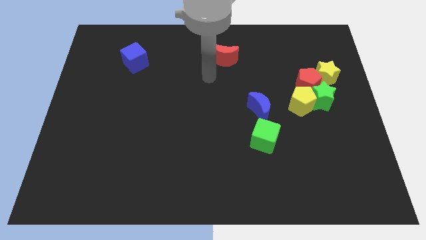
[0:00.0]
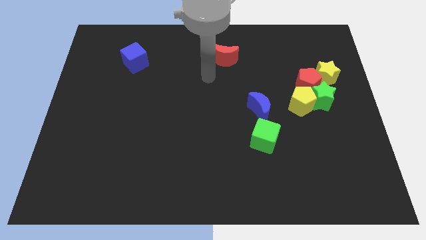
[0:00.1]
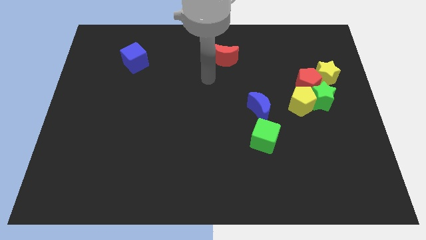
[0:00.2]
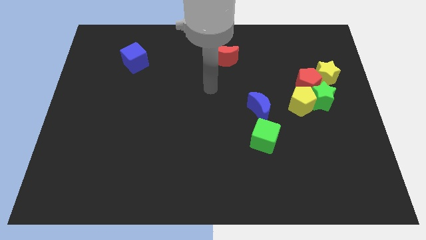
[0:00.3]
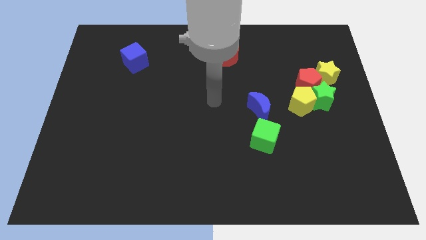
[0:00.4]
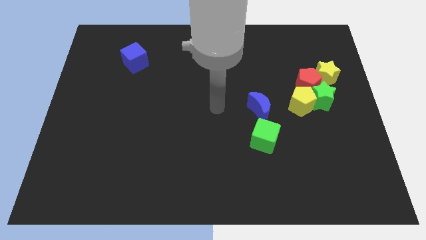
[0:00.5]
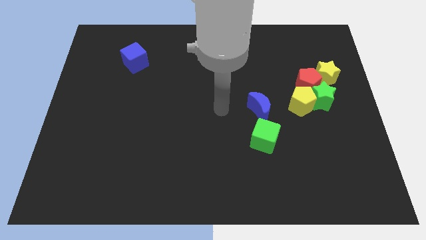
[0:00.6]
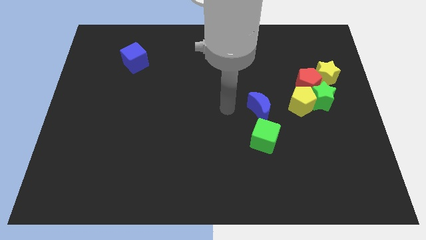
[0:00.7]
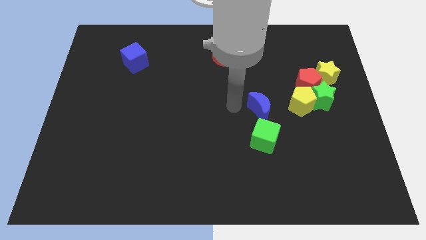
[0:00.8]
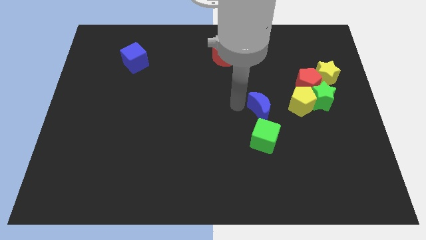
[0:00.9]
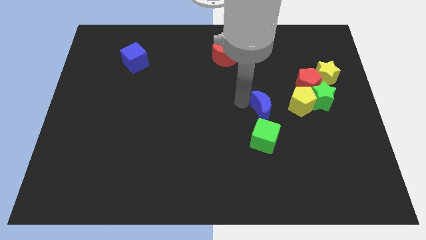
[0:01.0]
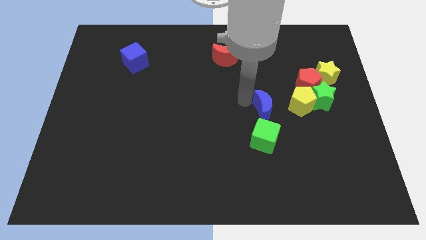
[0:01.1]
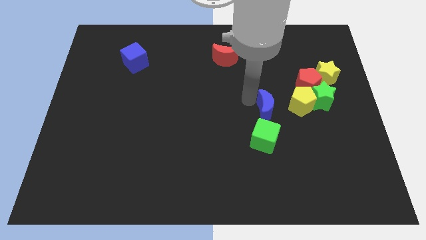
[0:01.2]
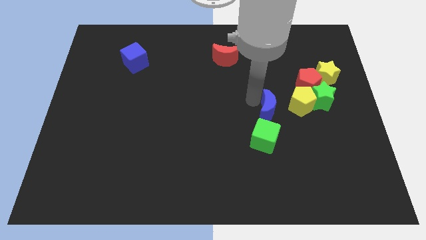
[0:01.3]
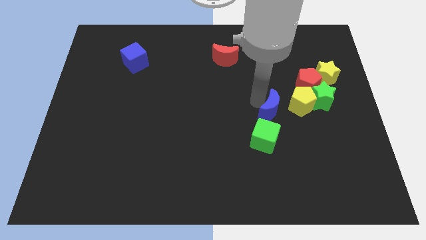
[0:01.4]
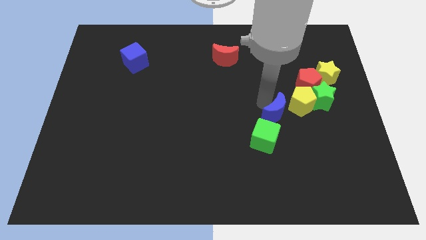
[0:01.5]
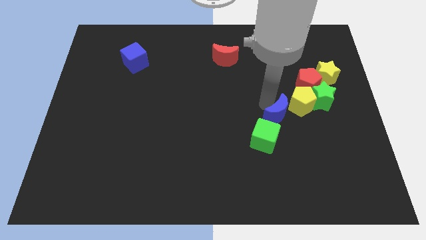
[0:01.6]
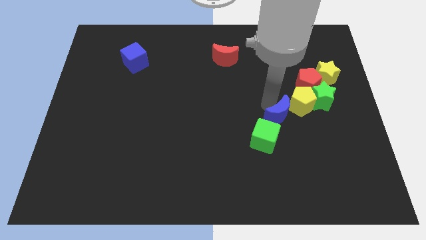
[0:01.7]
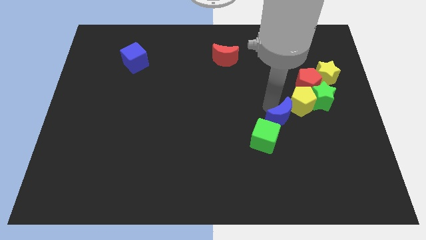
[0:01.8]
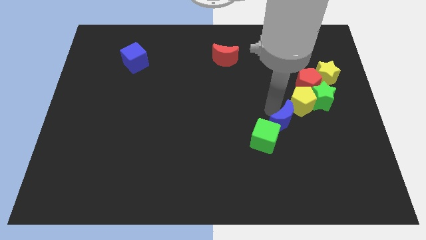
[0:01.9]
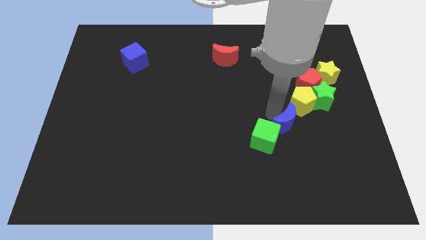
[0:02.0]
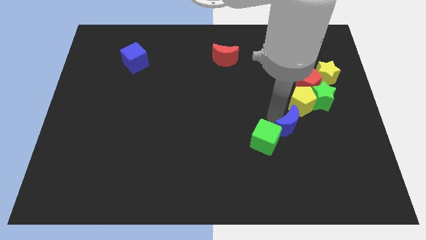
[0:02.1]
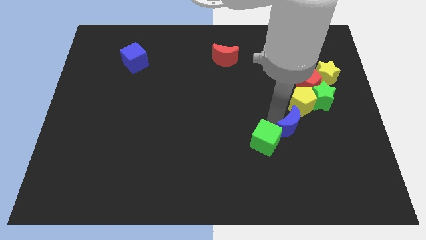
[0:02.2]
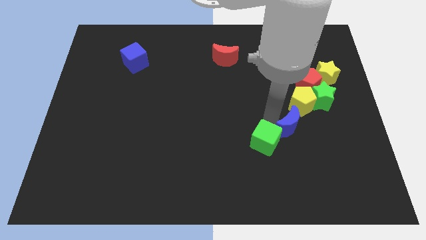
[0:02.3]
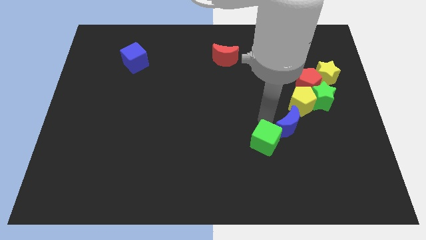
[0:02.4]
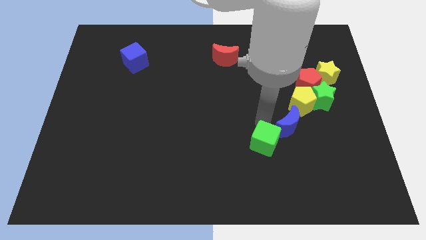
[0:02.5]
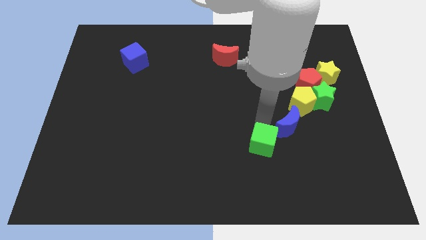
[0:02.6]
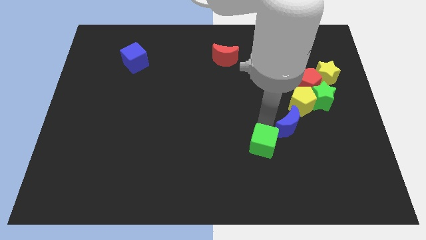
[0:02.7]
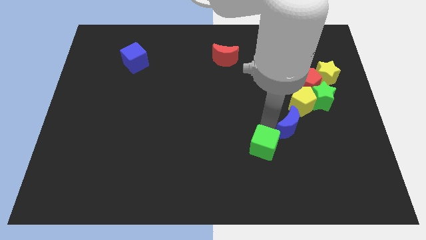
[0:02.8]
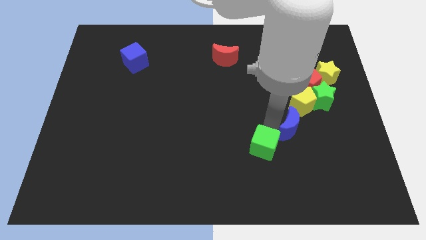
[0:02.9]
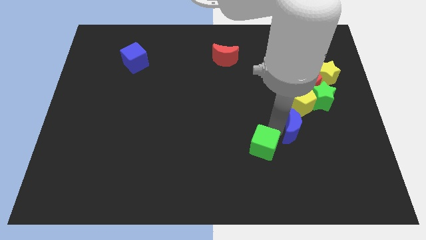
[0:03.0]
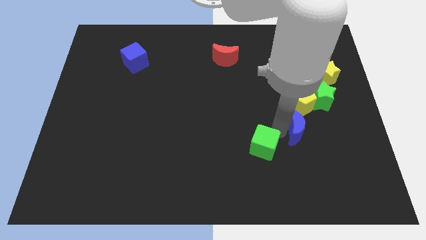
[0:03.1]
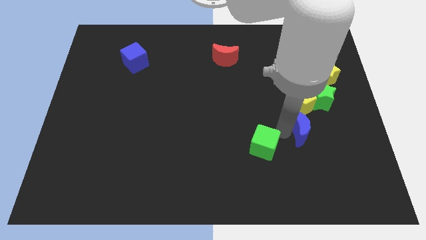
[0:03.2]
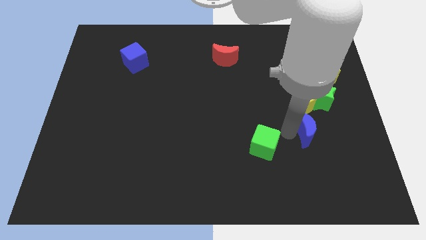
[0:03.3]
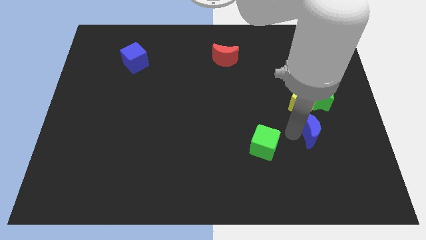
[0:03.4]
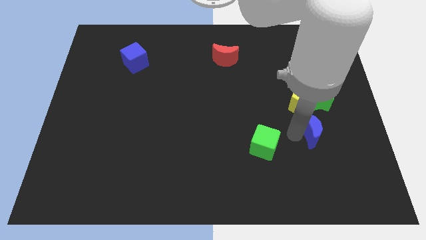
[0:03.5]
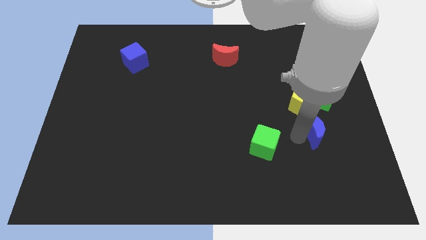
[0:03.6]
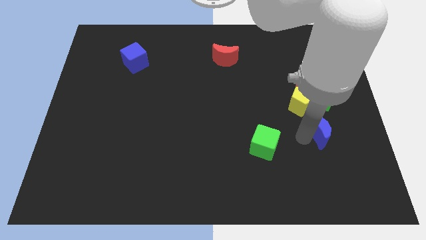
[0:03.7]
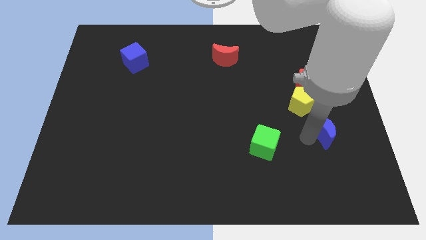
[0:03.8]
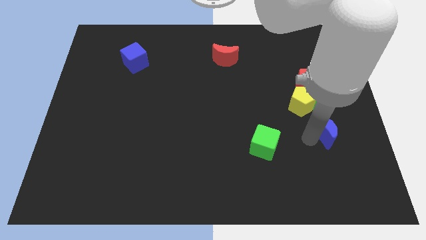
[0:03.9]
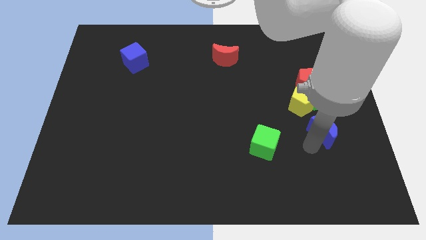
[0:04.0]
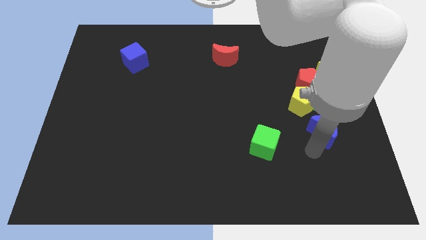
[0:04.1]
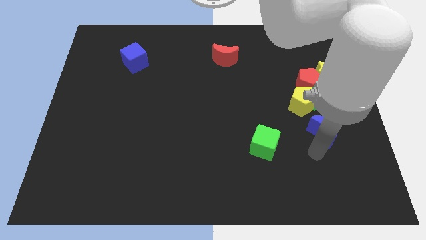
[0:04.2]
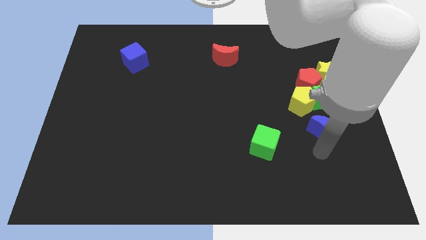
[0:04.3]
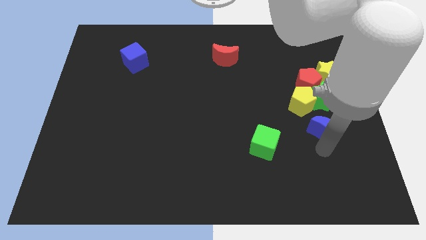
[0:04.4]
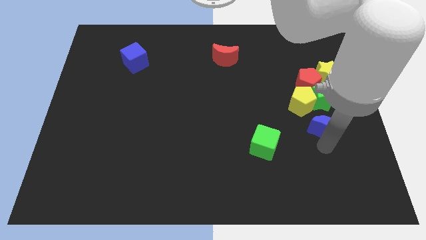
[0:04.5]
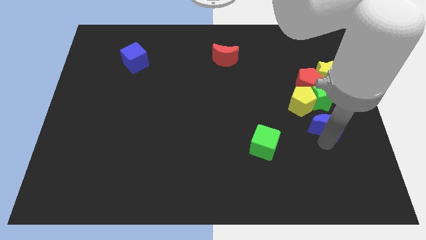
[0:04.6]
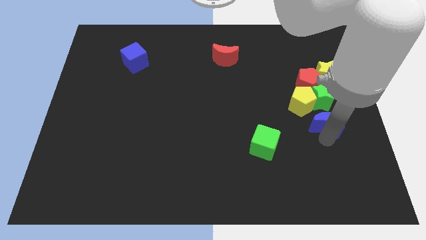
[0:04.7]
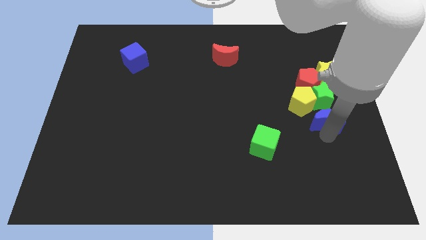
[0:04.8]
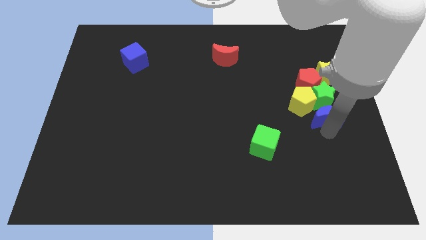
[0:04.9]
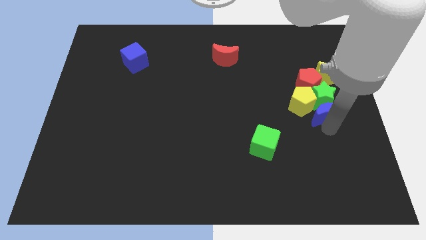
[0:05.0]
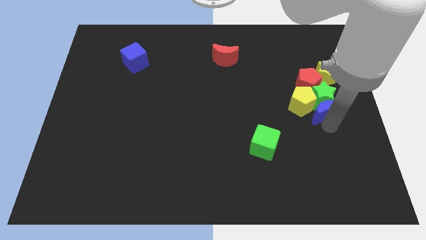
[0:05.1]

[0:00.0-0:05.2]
slide the blue moon close to the green star

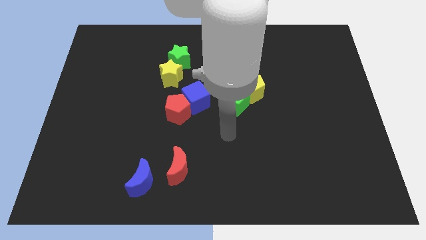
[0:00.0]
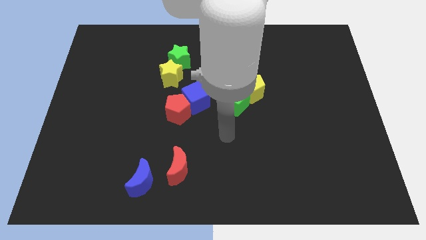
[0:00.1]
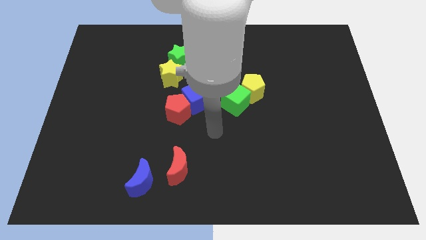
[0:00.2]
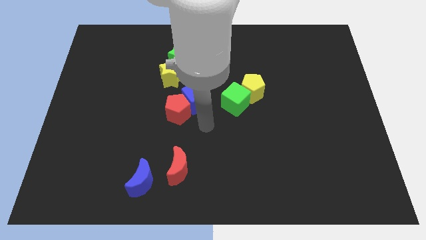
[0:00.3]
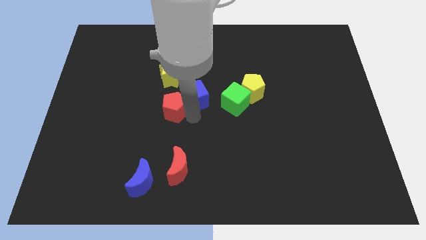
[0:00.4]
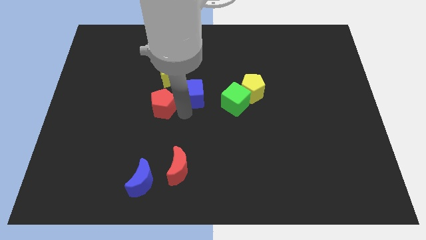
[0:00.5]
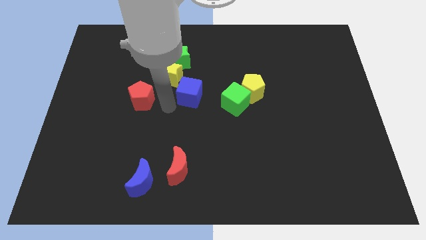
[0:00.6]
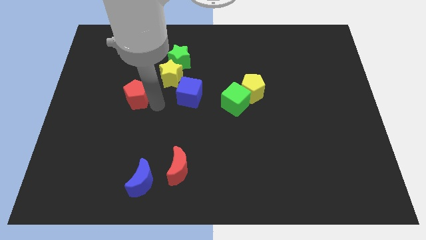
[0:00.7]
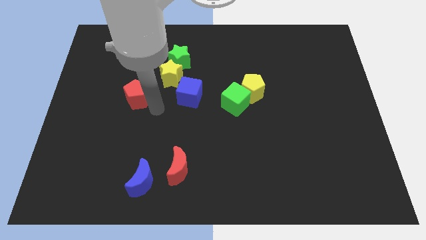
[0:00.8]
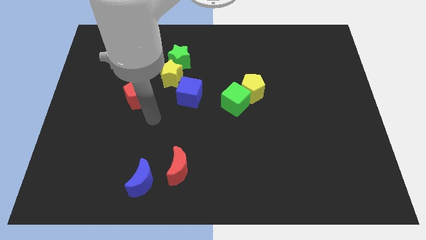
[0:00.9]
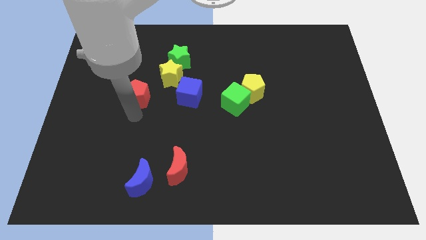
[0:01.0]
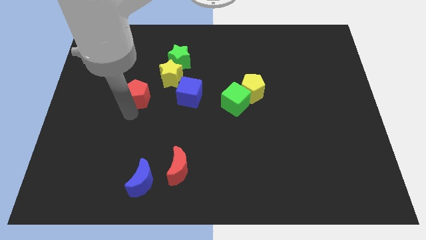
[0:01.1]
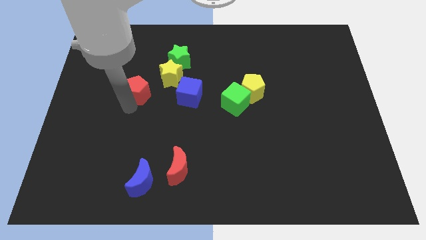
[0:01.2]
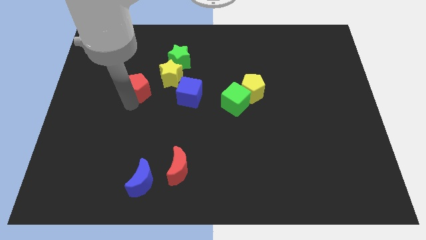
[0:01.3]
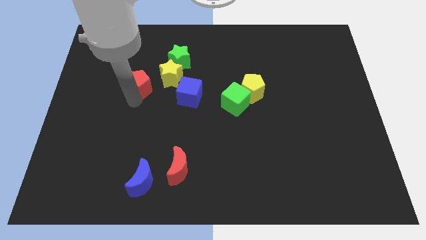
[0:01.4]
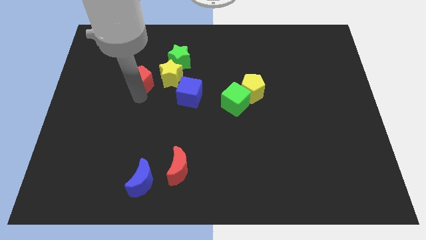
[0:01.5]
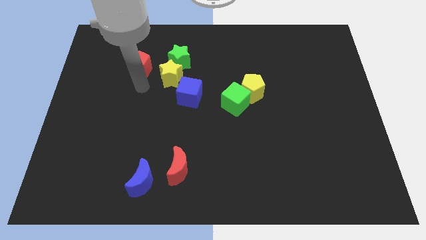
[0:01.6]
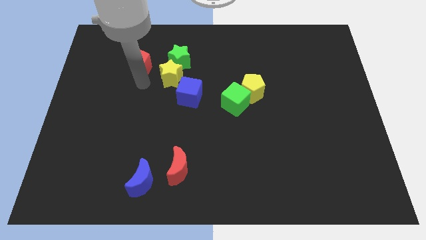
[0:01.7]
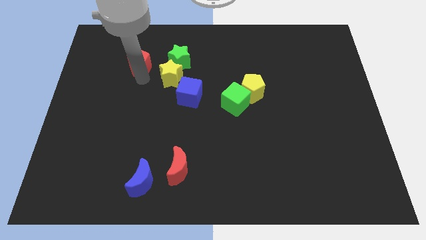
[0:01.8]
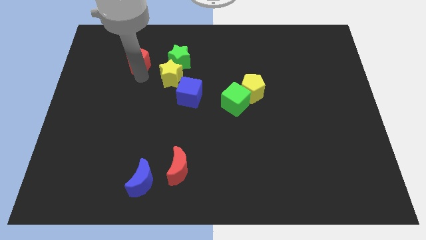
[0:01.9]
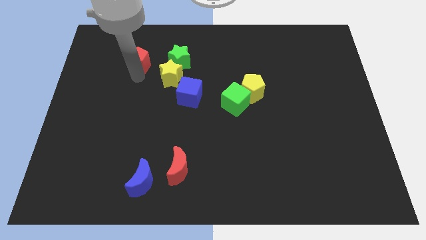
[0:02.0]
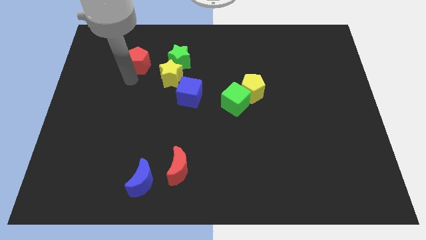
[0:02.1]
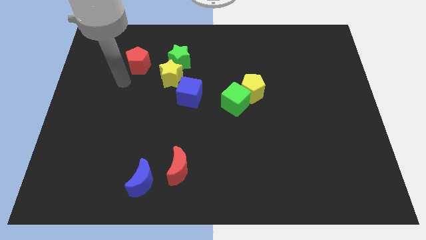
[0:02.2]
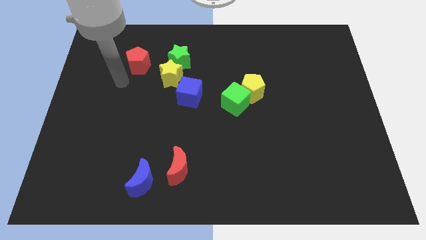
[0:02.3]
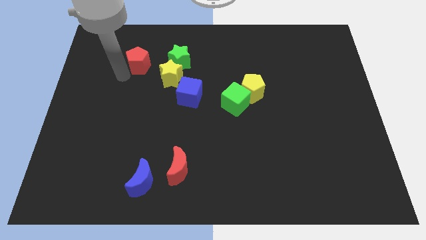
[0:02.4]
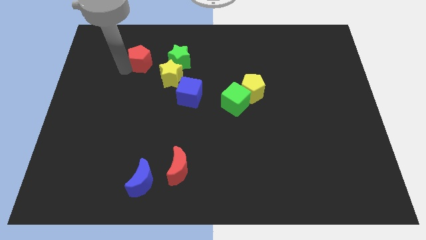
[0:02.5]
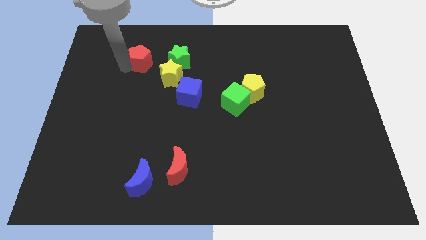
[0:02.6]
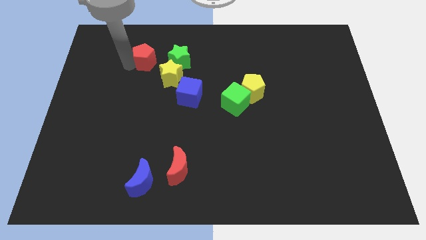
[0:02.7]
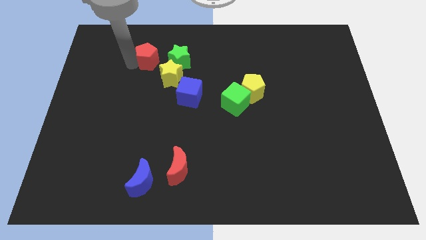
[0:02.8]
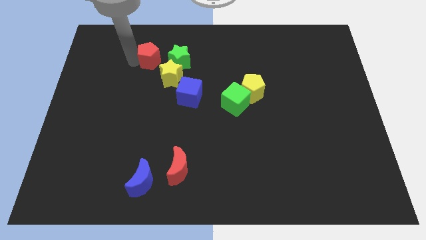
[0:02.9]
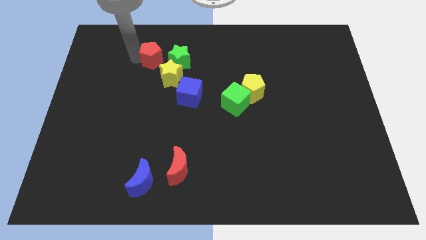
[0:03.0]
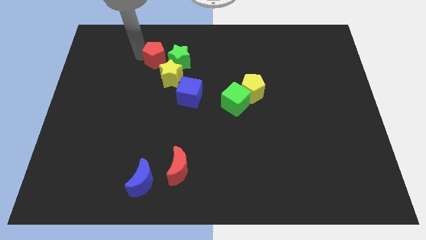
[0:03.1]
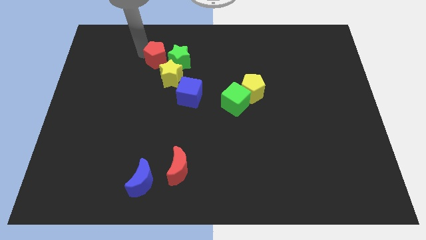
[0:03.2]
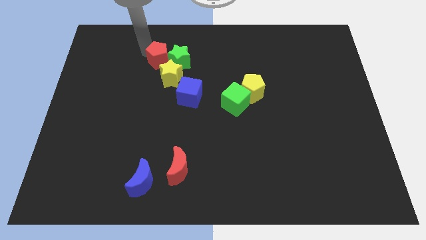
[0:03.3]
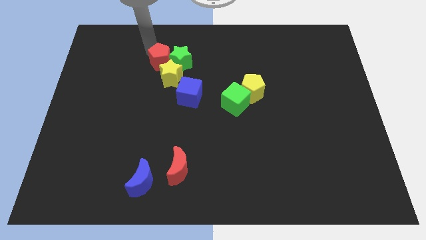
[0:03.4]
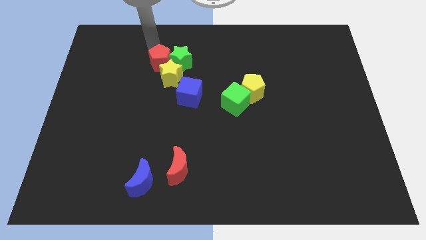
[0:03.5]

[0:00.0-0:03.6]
put the red pentagon next to the green star
